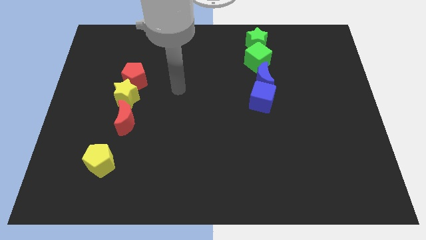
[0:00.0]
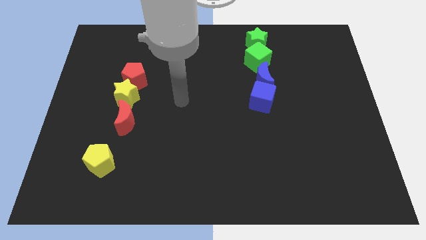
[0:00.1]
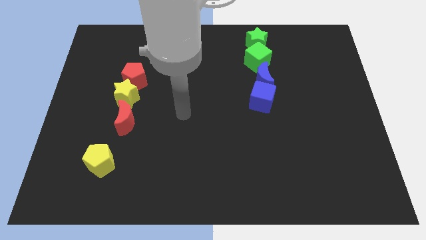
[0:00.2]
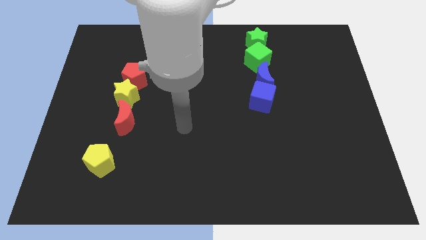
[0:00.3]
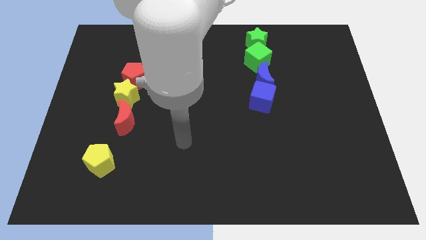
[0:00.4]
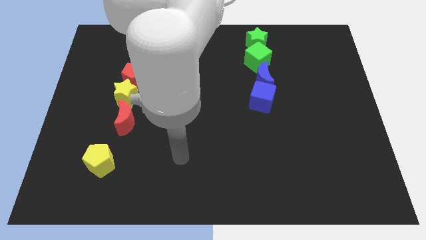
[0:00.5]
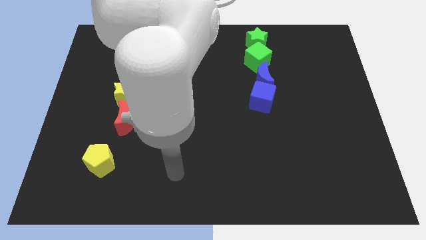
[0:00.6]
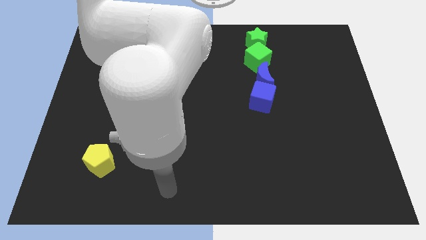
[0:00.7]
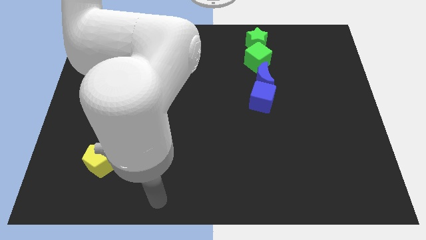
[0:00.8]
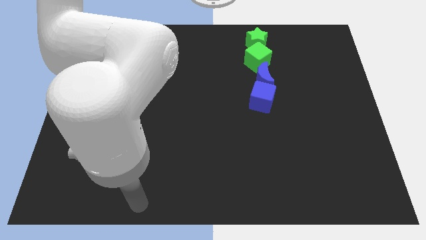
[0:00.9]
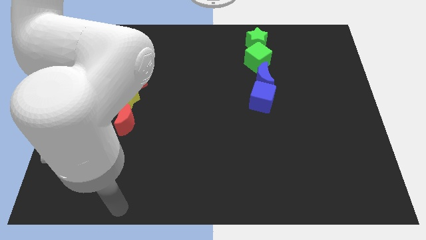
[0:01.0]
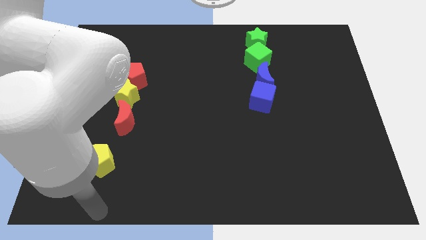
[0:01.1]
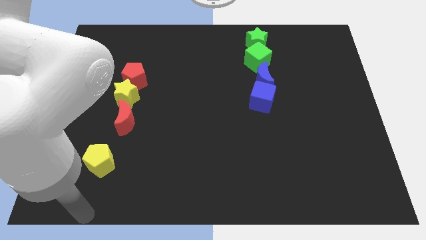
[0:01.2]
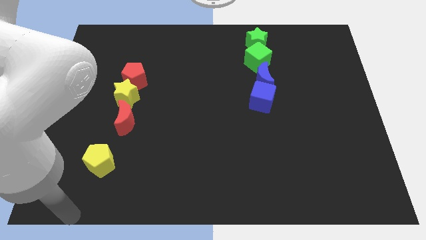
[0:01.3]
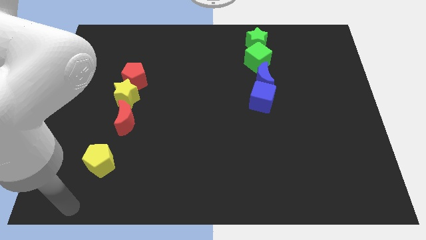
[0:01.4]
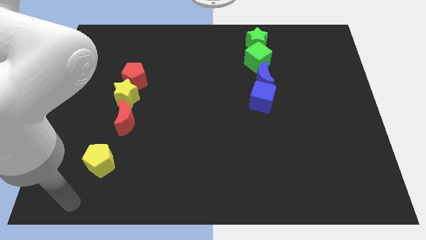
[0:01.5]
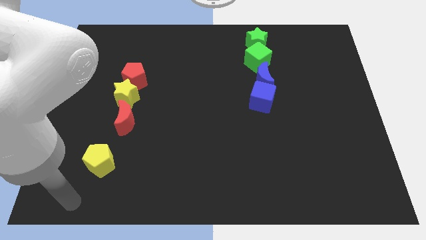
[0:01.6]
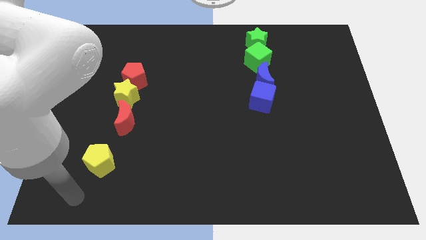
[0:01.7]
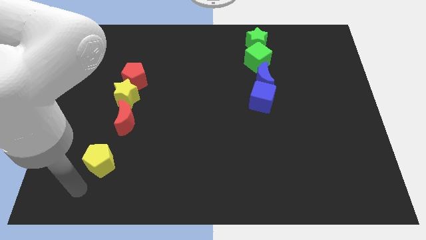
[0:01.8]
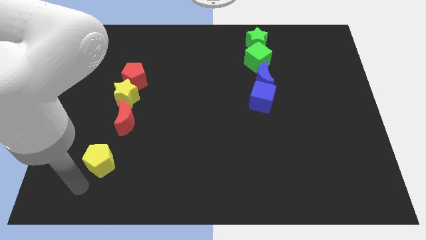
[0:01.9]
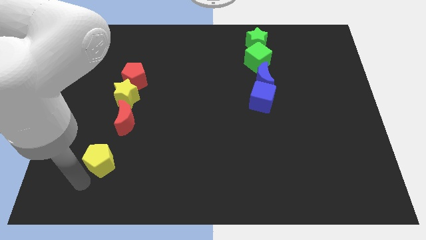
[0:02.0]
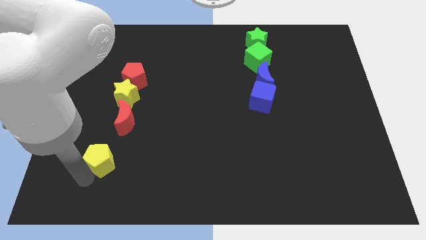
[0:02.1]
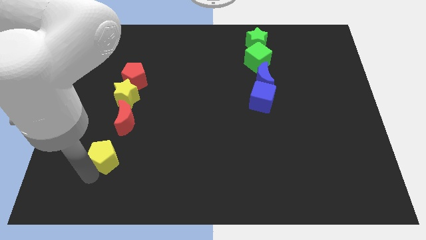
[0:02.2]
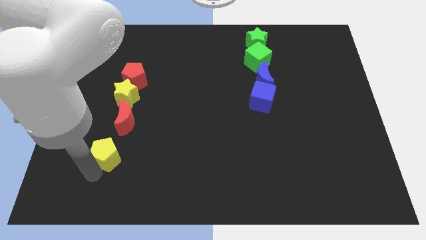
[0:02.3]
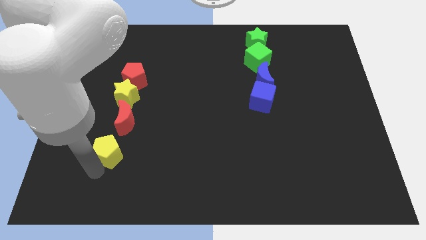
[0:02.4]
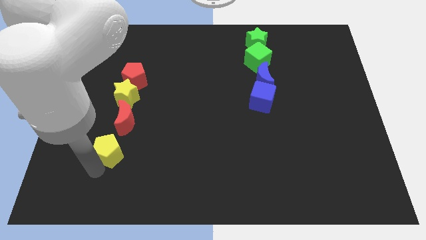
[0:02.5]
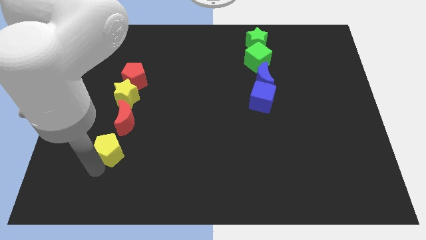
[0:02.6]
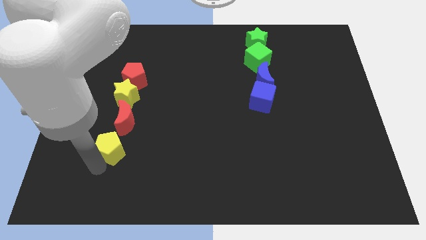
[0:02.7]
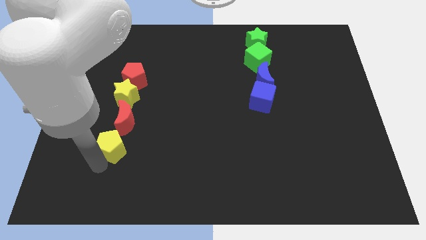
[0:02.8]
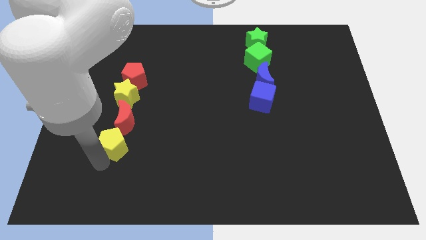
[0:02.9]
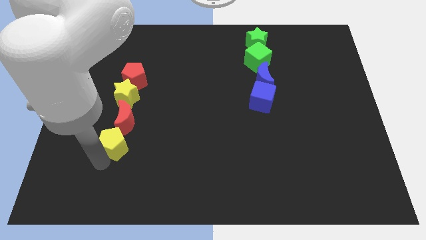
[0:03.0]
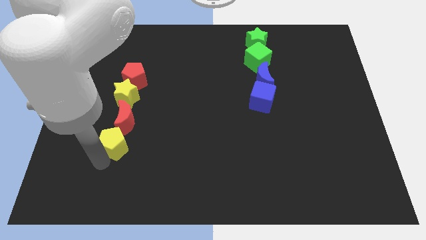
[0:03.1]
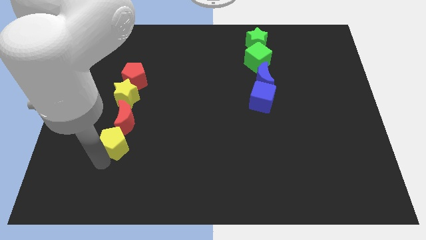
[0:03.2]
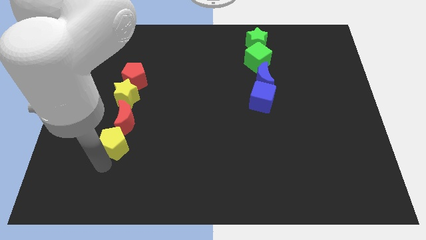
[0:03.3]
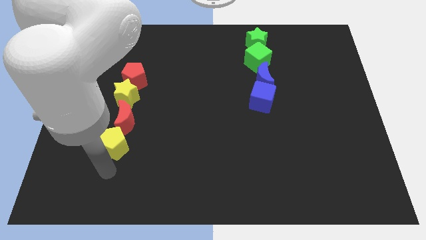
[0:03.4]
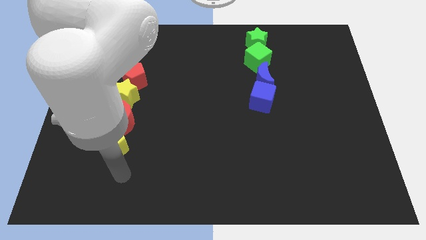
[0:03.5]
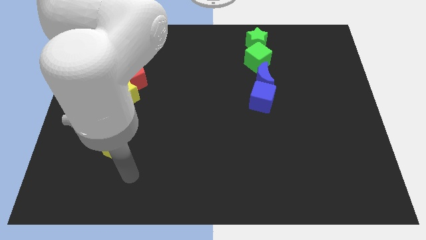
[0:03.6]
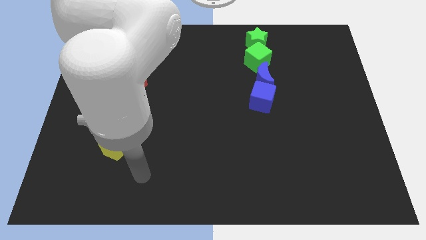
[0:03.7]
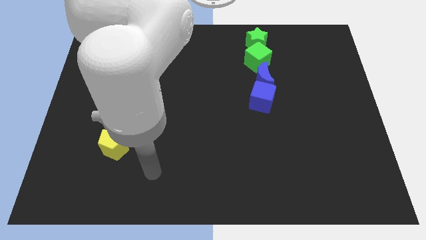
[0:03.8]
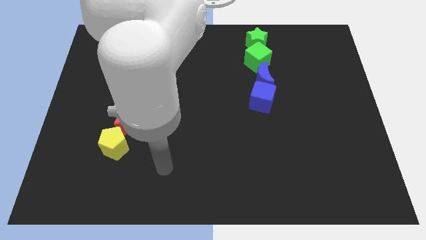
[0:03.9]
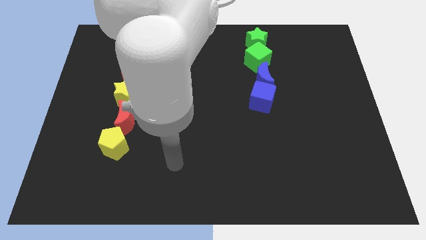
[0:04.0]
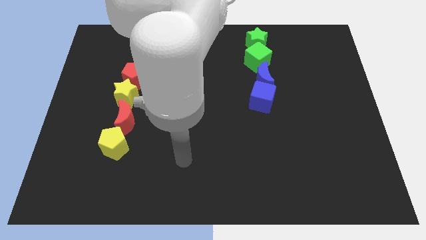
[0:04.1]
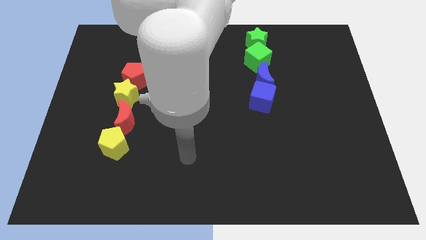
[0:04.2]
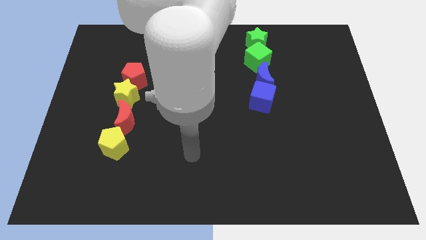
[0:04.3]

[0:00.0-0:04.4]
push the yellow pentagon to the bottom of the red crescent

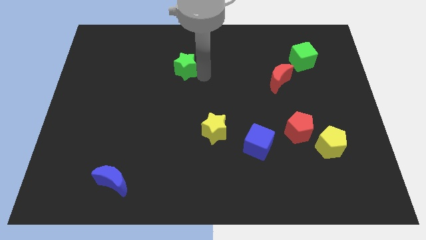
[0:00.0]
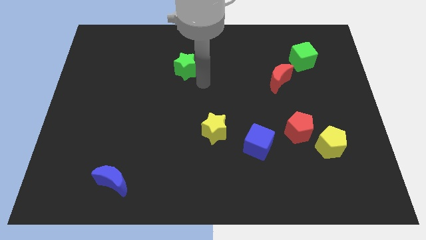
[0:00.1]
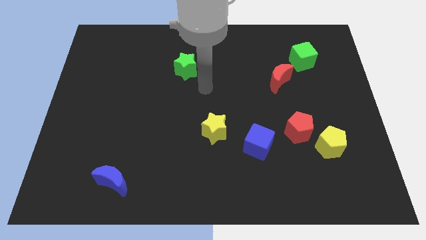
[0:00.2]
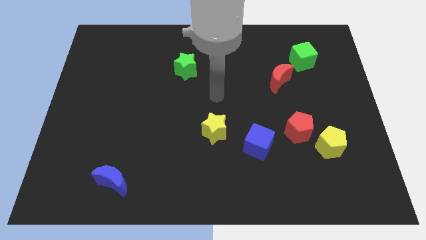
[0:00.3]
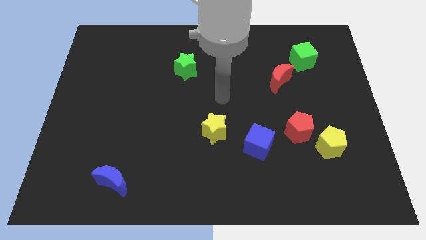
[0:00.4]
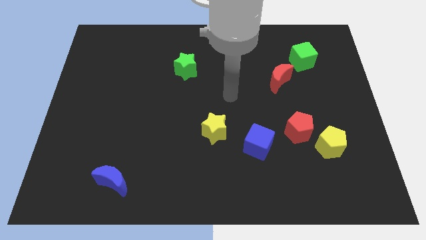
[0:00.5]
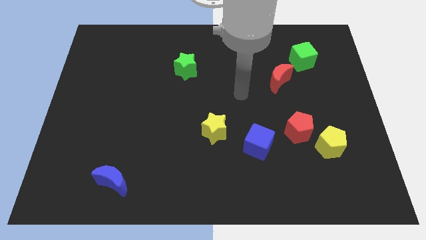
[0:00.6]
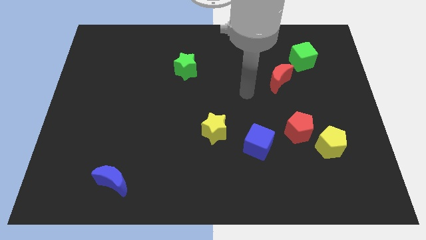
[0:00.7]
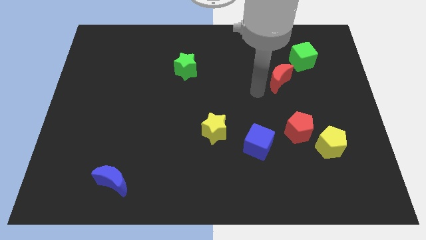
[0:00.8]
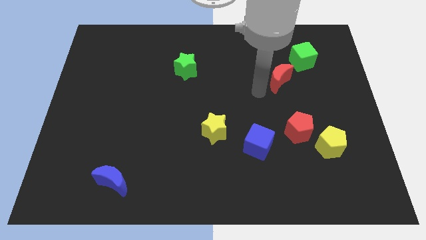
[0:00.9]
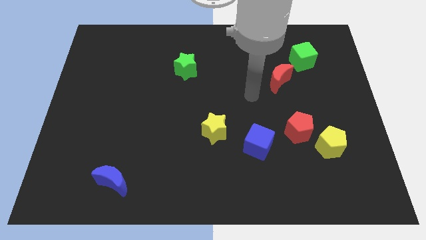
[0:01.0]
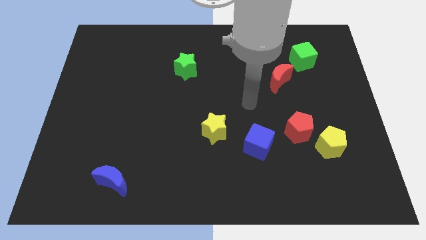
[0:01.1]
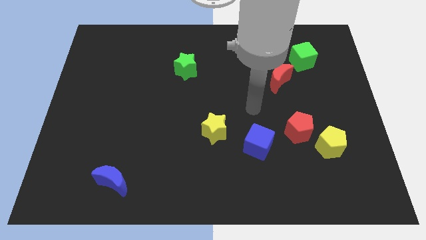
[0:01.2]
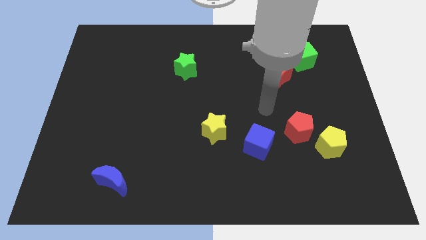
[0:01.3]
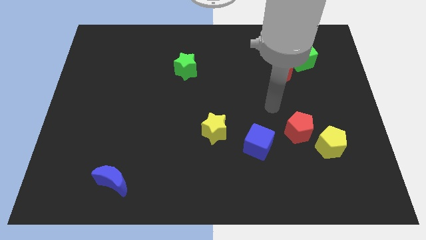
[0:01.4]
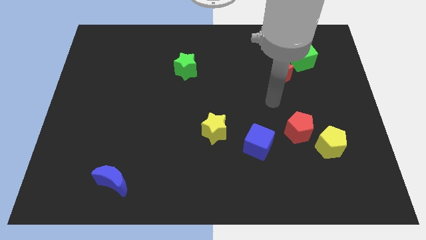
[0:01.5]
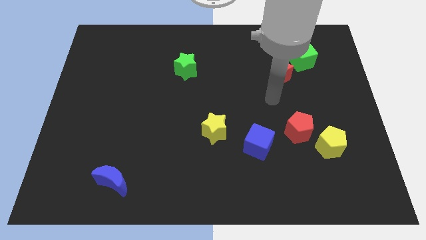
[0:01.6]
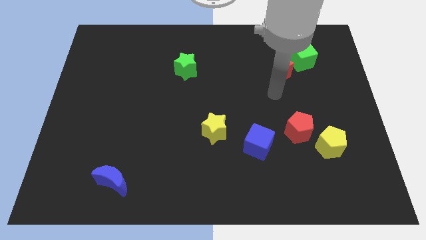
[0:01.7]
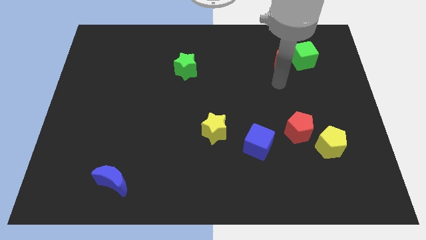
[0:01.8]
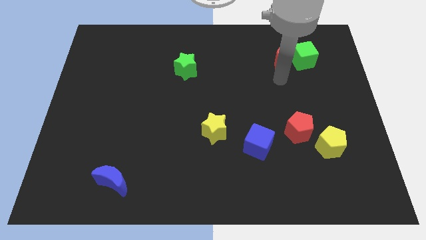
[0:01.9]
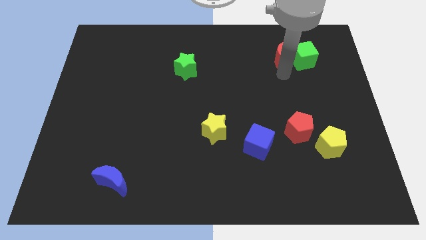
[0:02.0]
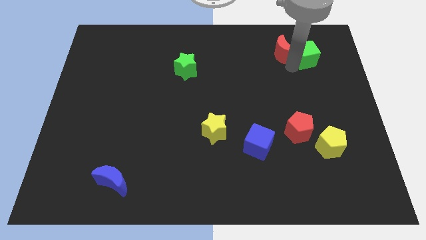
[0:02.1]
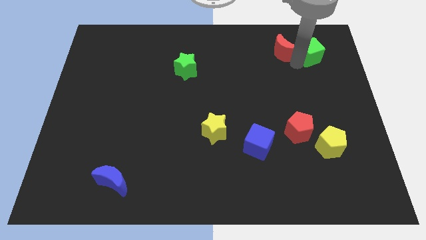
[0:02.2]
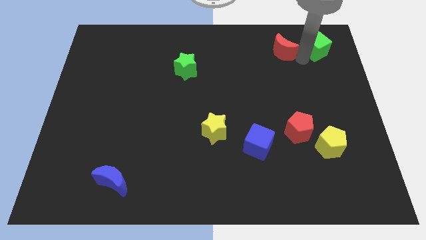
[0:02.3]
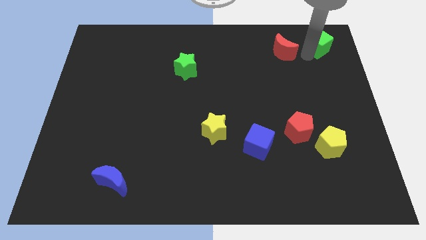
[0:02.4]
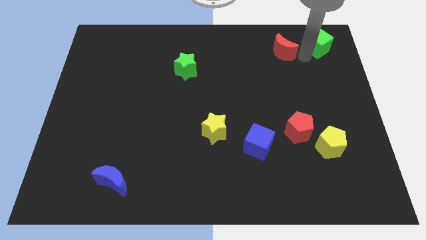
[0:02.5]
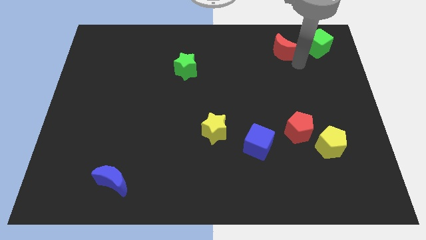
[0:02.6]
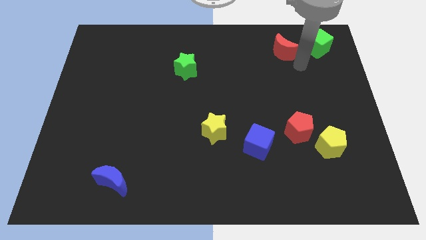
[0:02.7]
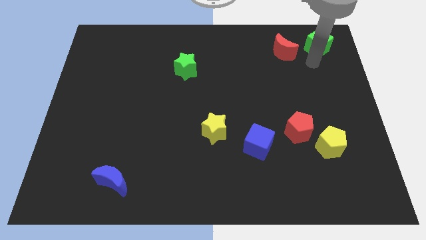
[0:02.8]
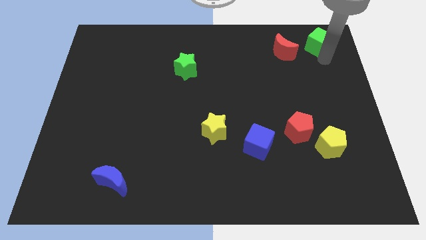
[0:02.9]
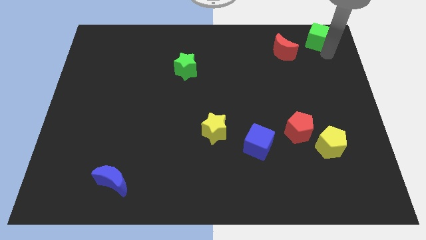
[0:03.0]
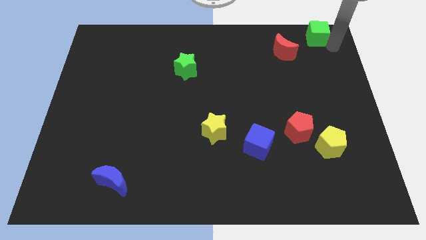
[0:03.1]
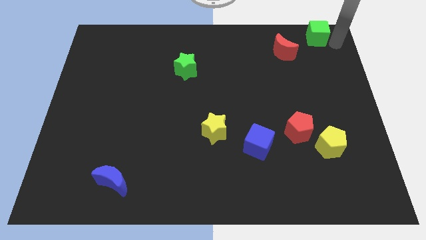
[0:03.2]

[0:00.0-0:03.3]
separate the red moon from the green cube

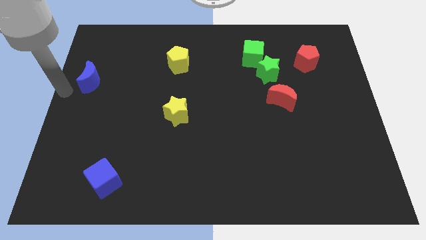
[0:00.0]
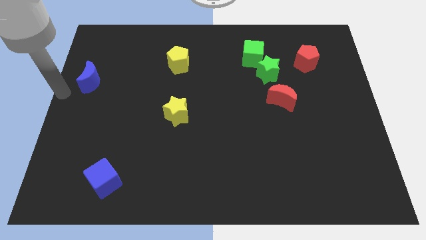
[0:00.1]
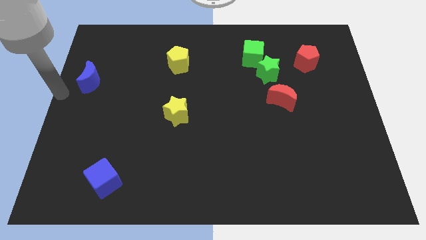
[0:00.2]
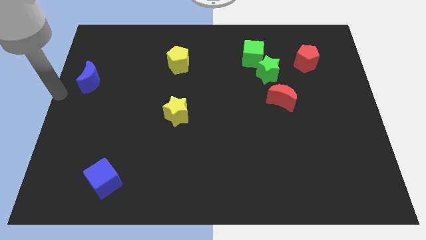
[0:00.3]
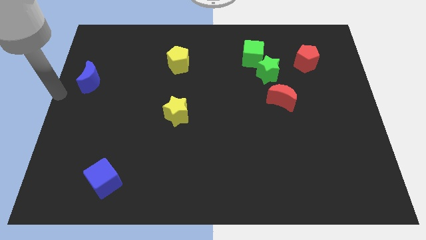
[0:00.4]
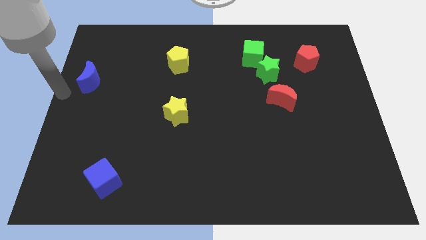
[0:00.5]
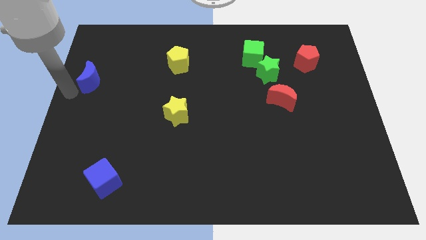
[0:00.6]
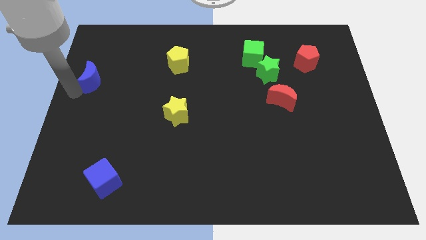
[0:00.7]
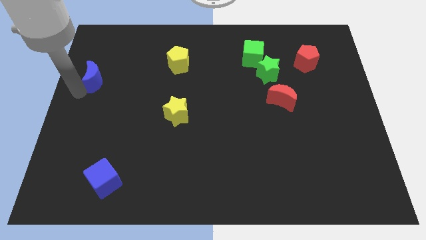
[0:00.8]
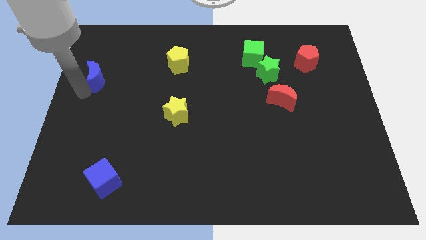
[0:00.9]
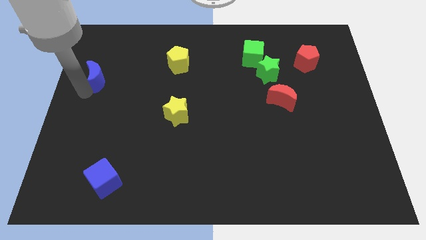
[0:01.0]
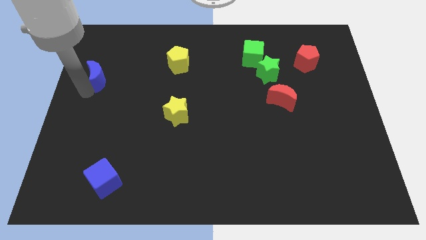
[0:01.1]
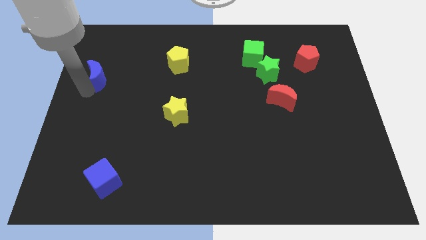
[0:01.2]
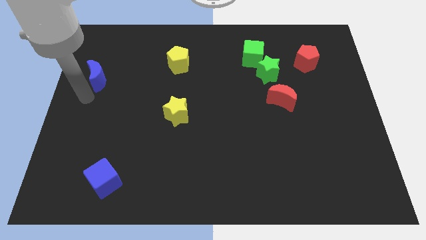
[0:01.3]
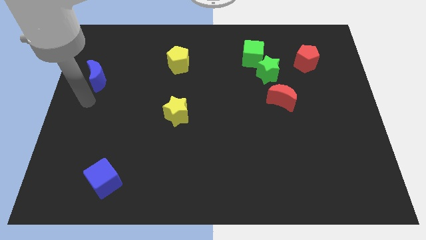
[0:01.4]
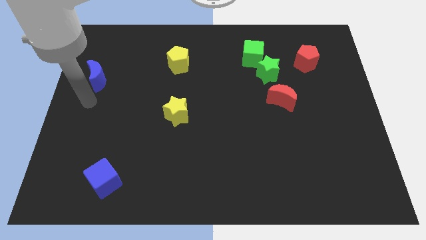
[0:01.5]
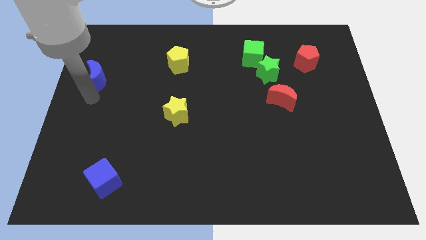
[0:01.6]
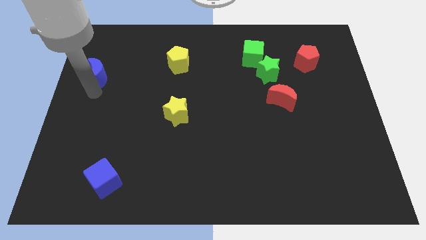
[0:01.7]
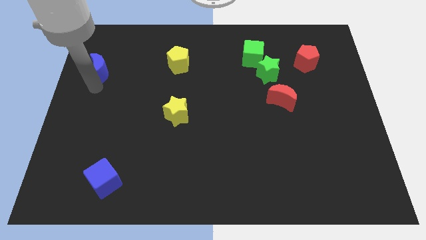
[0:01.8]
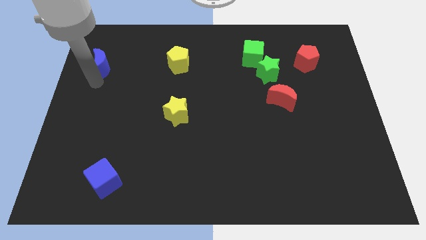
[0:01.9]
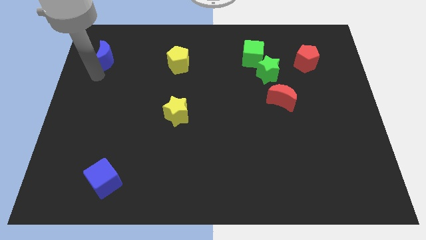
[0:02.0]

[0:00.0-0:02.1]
put the blue crescent horizontally to the left side of the yellow pentagon
